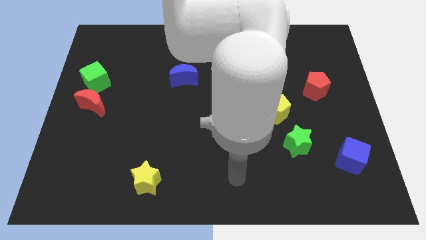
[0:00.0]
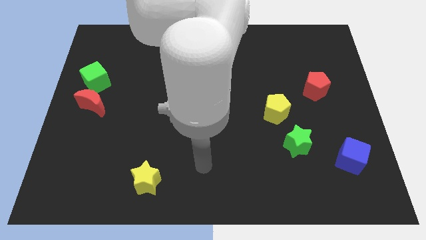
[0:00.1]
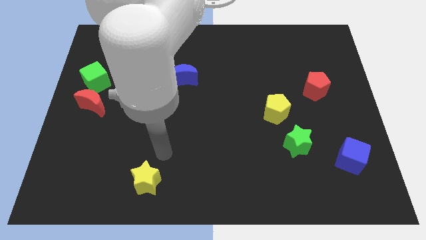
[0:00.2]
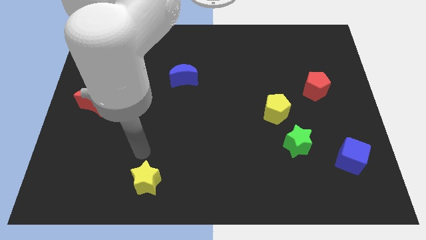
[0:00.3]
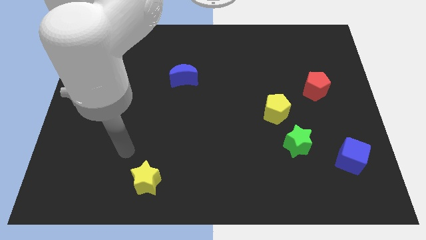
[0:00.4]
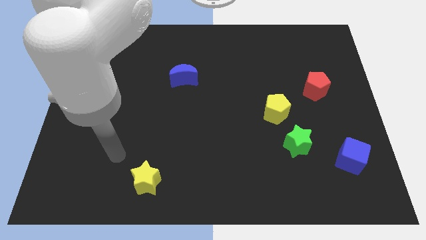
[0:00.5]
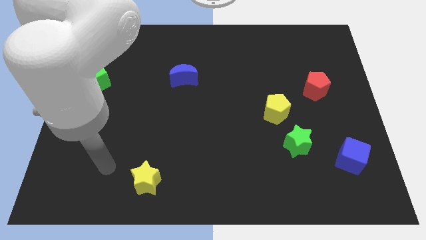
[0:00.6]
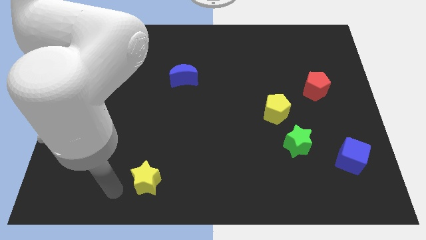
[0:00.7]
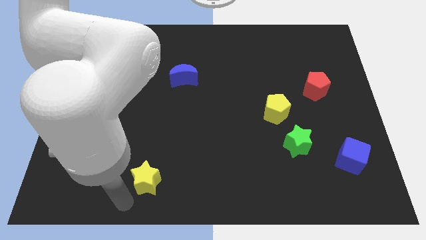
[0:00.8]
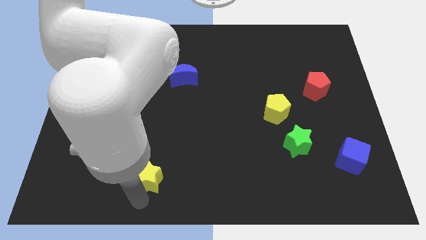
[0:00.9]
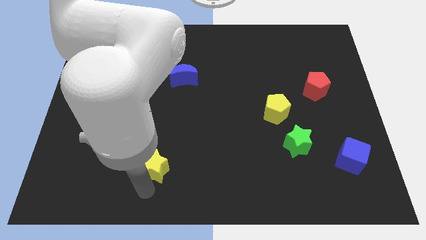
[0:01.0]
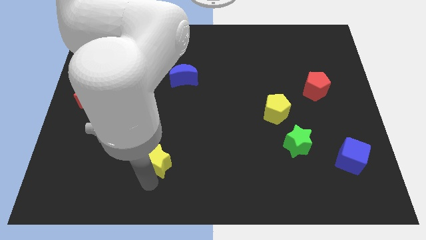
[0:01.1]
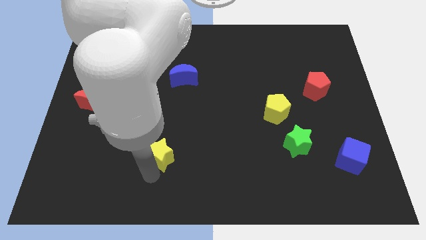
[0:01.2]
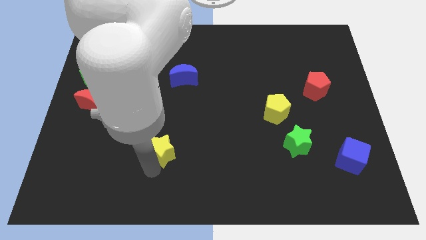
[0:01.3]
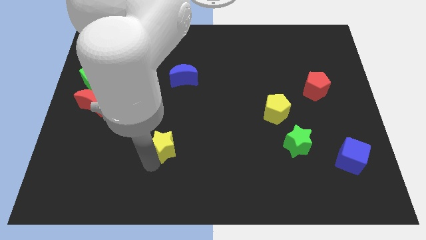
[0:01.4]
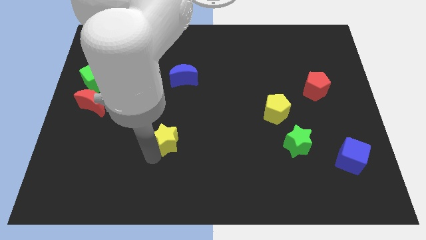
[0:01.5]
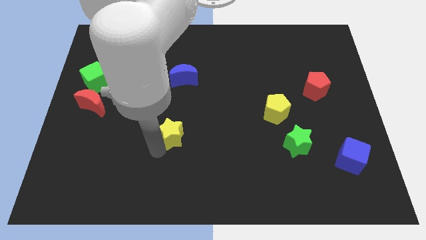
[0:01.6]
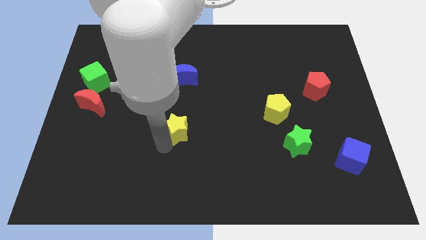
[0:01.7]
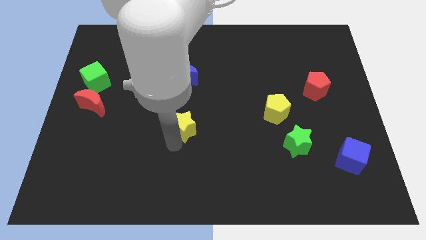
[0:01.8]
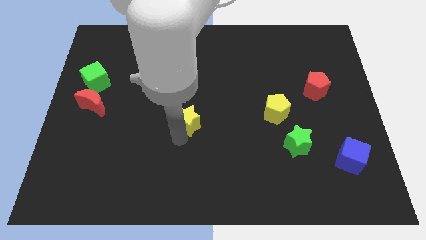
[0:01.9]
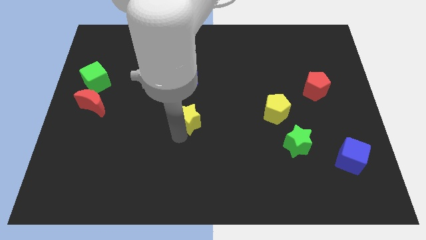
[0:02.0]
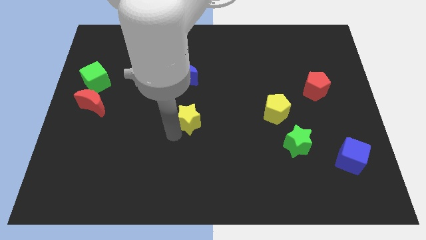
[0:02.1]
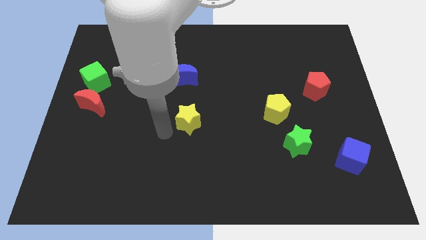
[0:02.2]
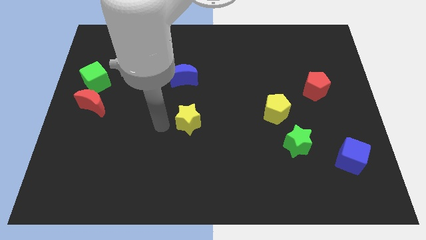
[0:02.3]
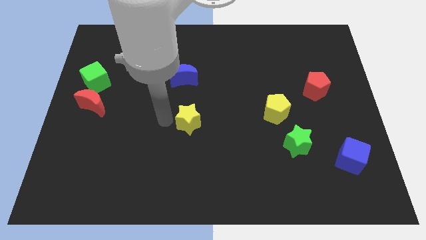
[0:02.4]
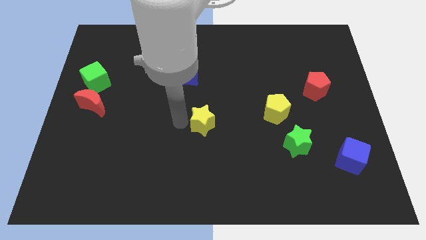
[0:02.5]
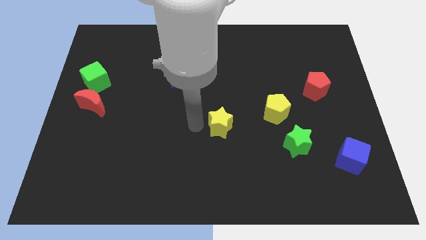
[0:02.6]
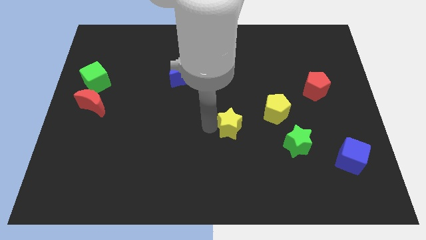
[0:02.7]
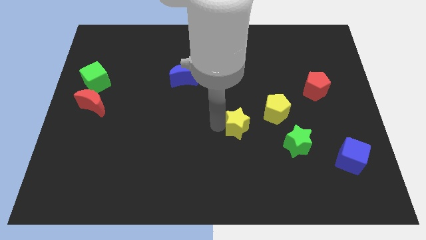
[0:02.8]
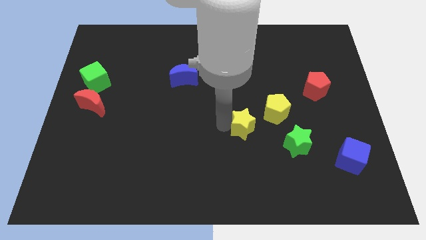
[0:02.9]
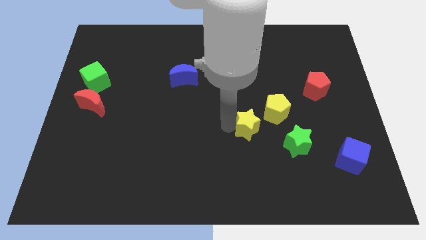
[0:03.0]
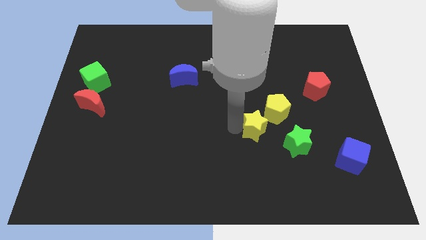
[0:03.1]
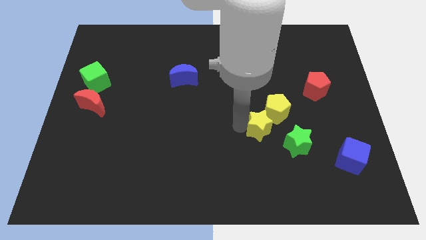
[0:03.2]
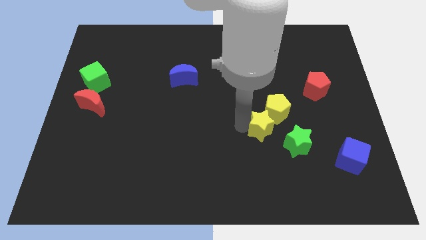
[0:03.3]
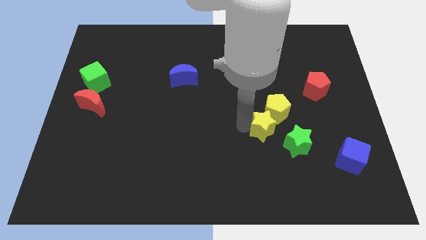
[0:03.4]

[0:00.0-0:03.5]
push the yellow star next to the yellow pentagon

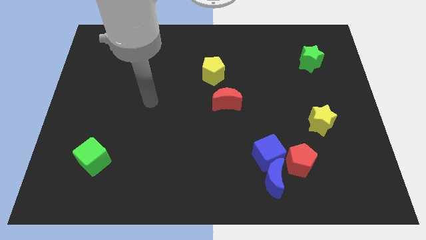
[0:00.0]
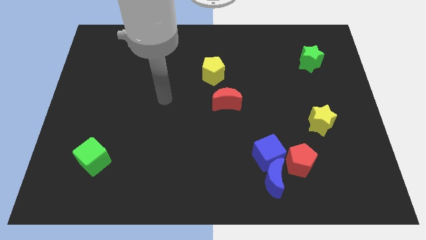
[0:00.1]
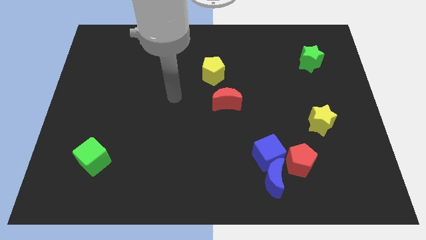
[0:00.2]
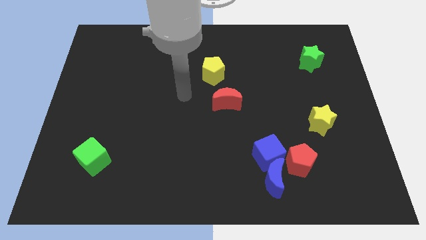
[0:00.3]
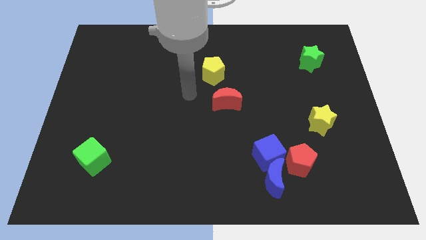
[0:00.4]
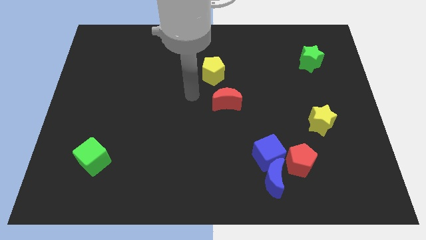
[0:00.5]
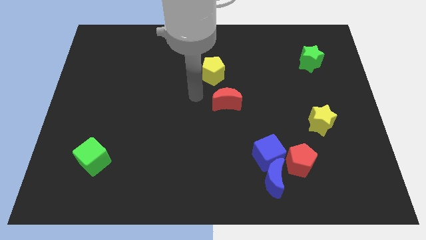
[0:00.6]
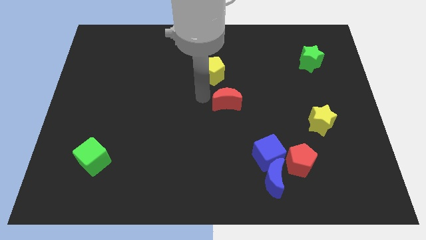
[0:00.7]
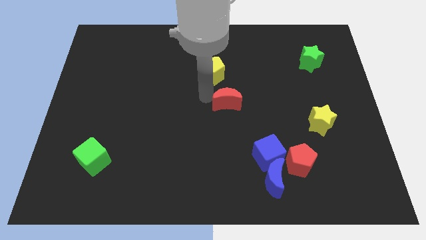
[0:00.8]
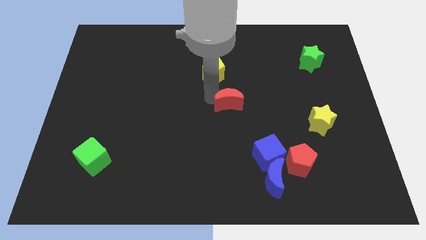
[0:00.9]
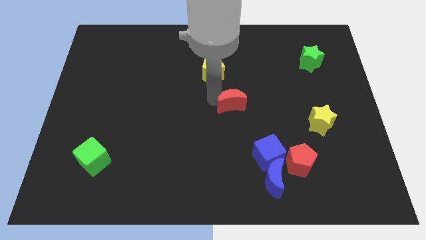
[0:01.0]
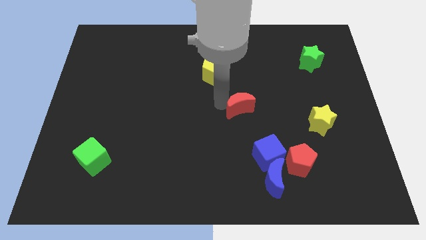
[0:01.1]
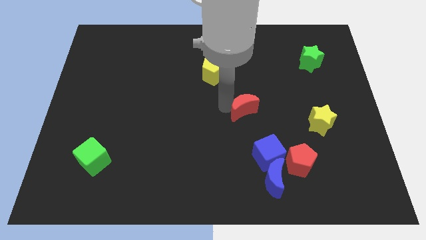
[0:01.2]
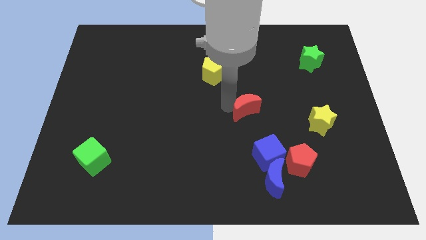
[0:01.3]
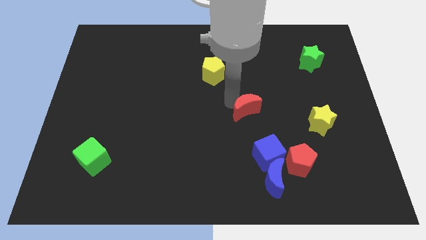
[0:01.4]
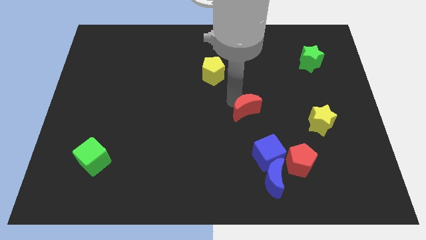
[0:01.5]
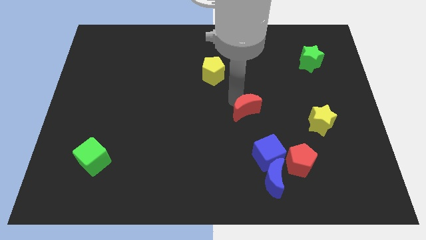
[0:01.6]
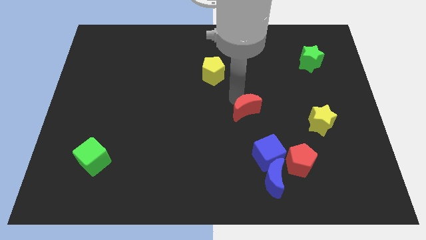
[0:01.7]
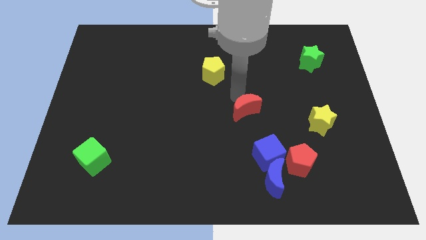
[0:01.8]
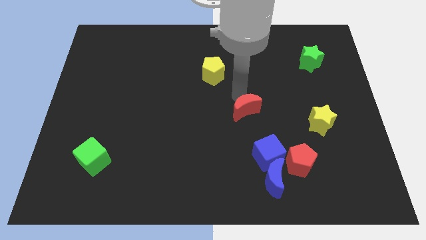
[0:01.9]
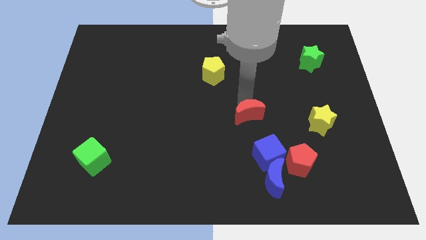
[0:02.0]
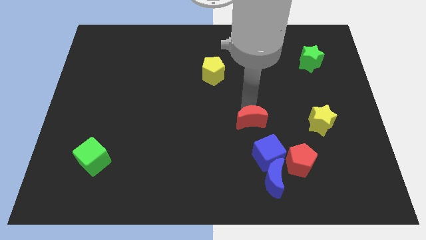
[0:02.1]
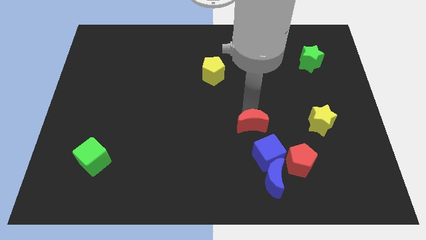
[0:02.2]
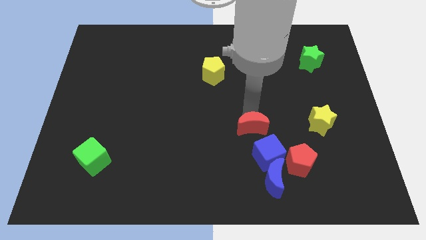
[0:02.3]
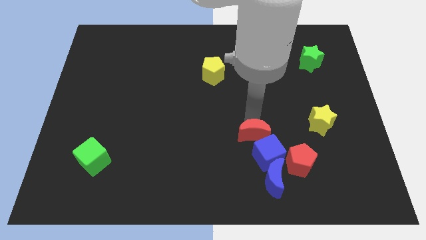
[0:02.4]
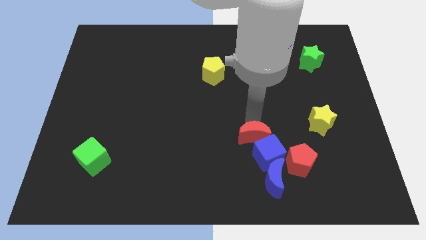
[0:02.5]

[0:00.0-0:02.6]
move the red moon close to the blue cube

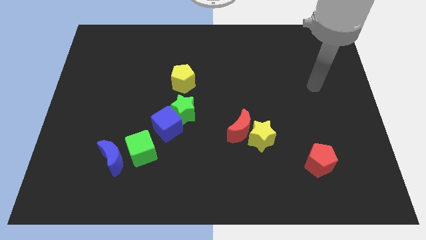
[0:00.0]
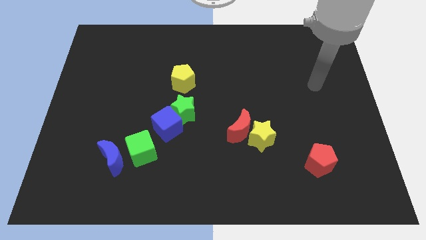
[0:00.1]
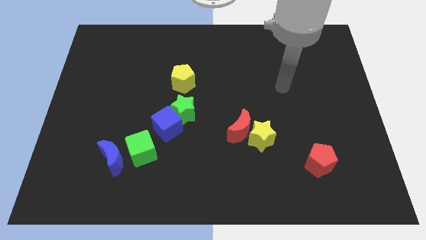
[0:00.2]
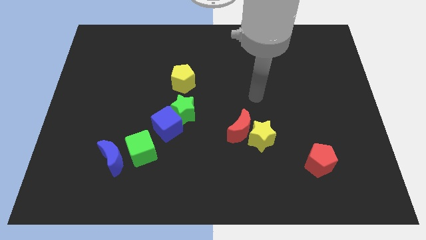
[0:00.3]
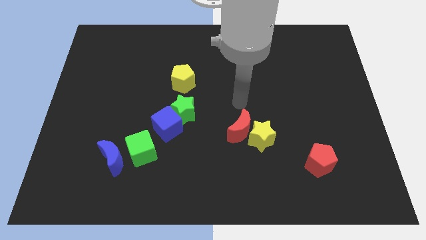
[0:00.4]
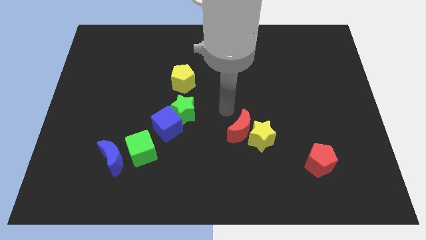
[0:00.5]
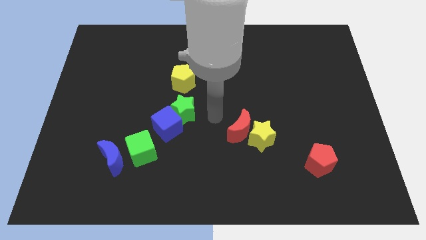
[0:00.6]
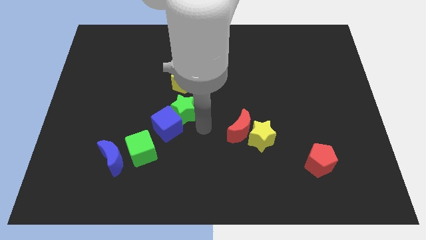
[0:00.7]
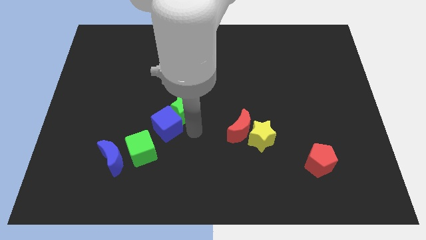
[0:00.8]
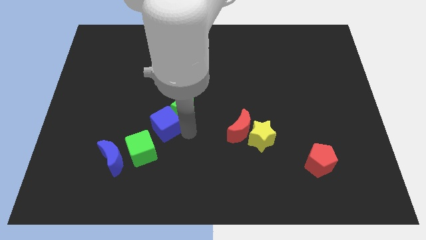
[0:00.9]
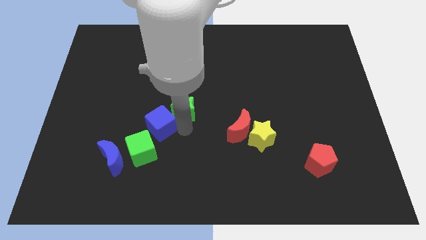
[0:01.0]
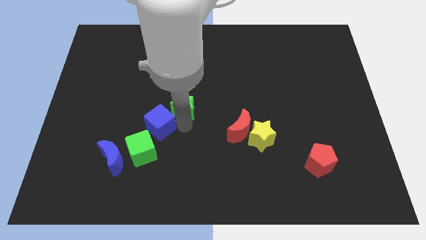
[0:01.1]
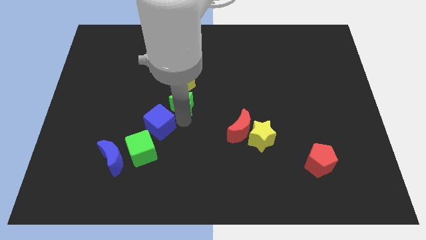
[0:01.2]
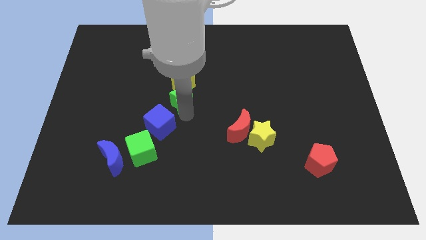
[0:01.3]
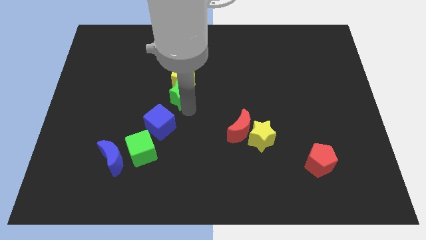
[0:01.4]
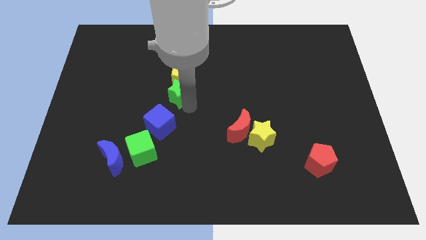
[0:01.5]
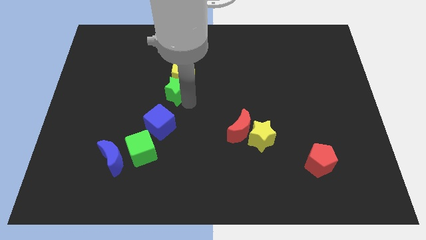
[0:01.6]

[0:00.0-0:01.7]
move the green star next to the yellow pentagon

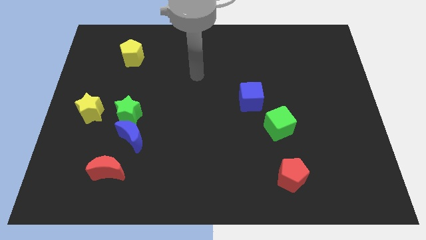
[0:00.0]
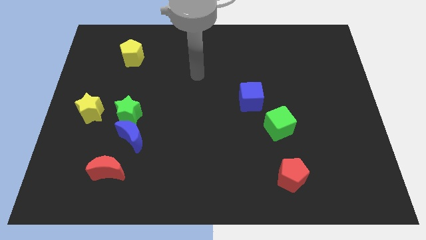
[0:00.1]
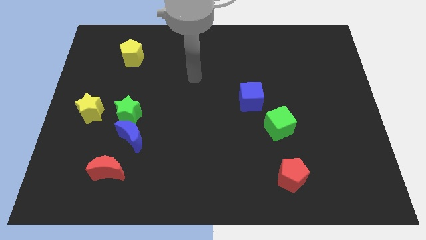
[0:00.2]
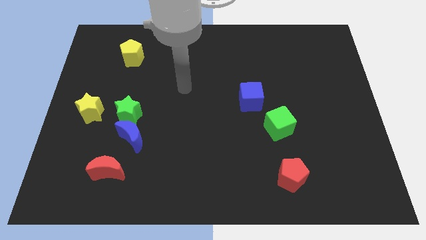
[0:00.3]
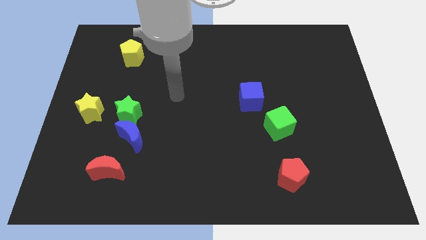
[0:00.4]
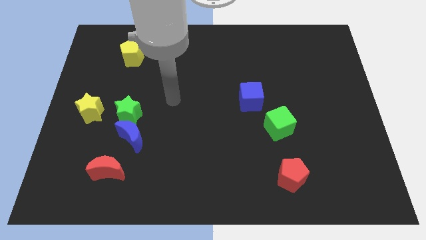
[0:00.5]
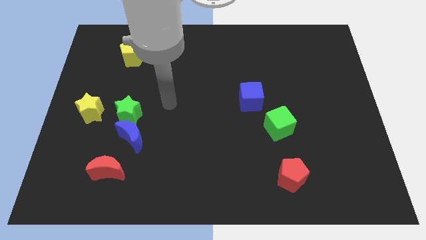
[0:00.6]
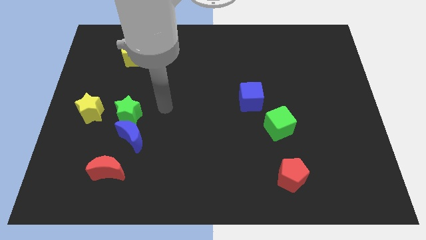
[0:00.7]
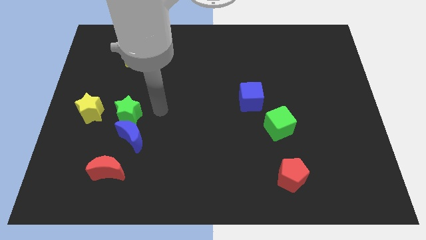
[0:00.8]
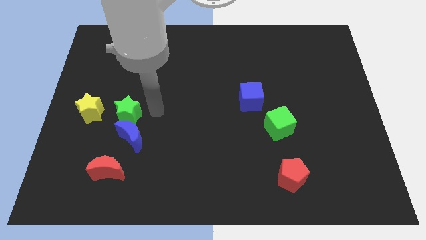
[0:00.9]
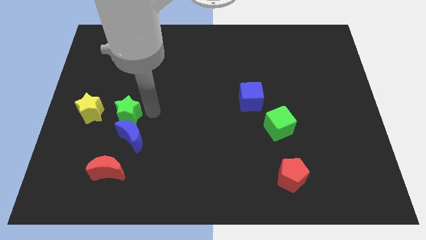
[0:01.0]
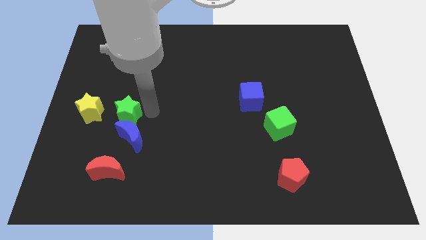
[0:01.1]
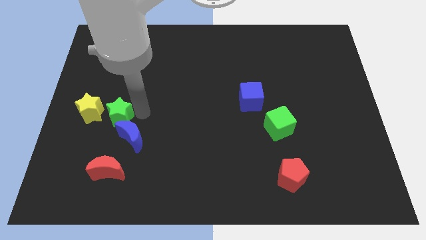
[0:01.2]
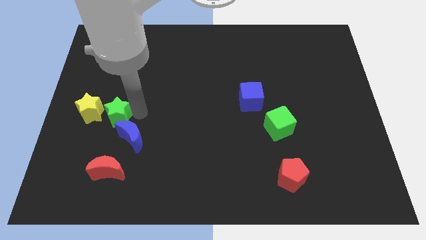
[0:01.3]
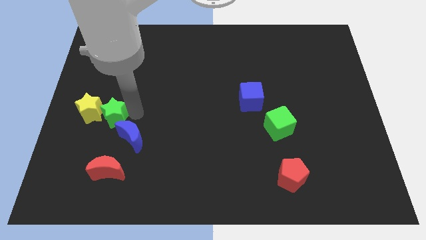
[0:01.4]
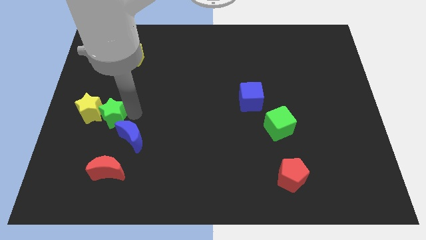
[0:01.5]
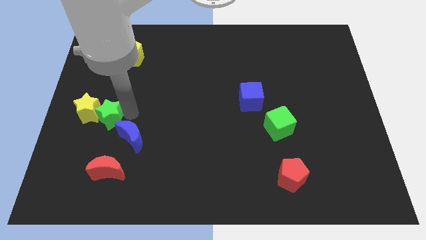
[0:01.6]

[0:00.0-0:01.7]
move the green star to the yellow star
